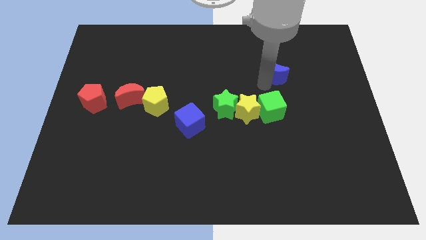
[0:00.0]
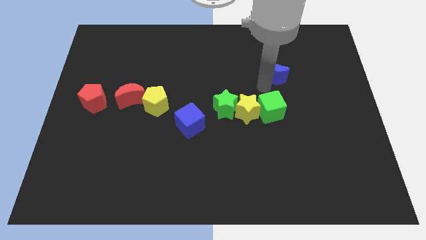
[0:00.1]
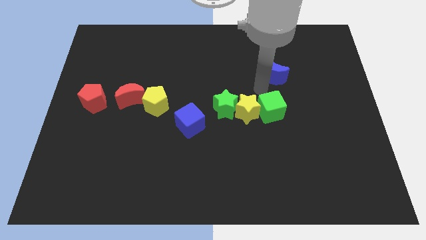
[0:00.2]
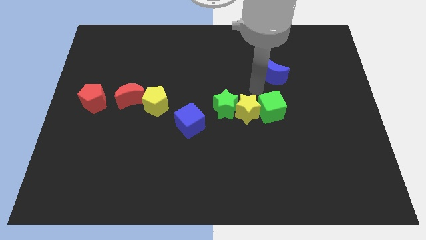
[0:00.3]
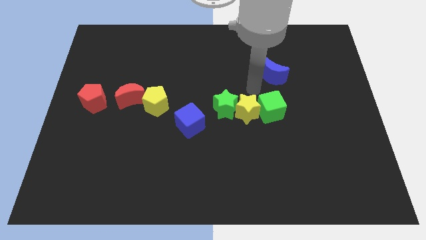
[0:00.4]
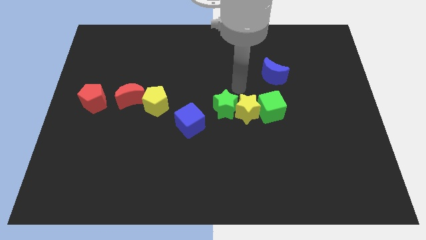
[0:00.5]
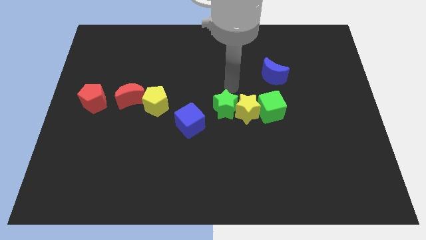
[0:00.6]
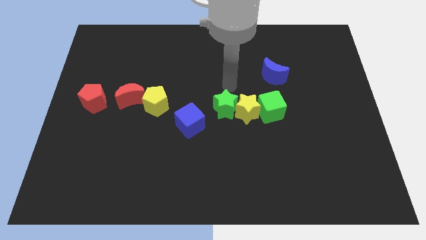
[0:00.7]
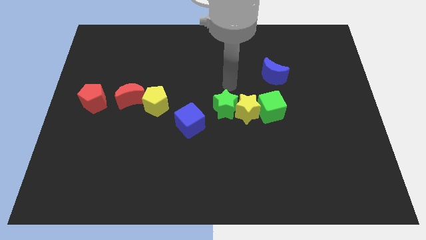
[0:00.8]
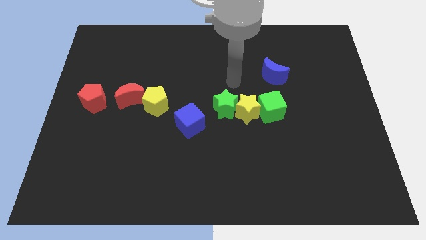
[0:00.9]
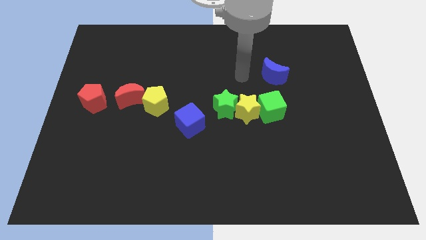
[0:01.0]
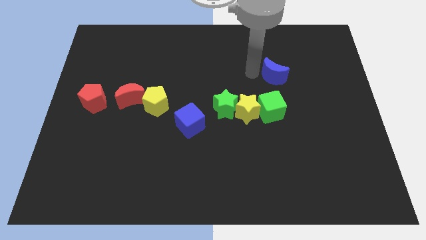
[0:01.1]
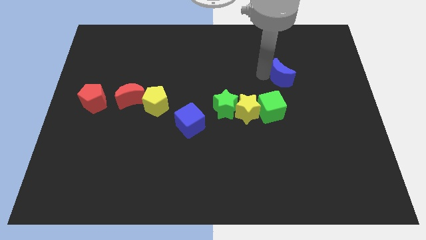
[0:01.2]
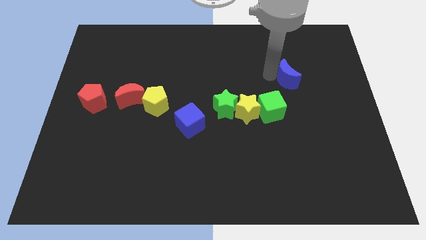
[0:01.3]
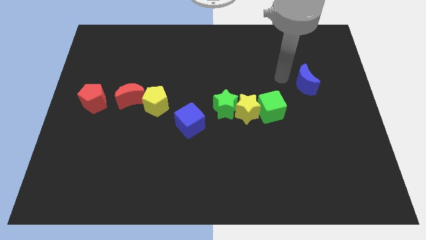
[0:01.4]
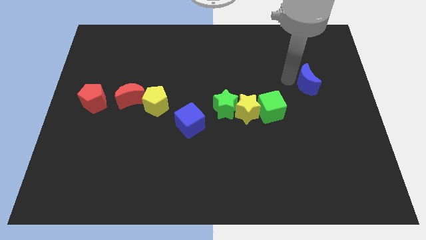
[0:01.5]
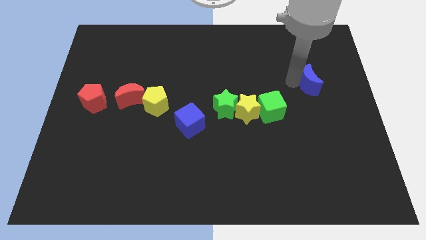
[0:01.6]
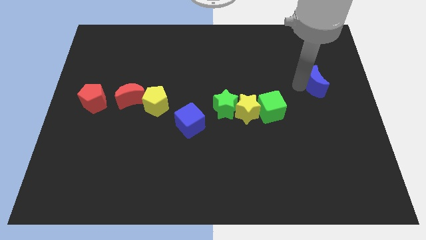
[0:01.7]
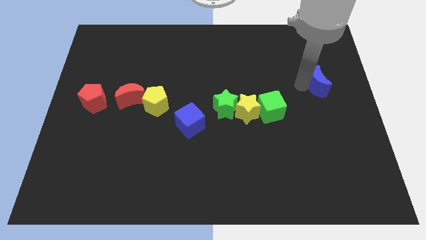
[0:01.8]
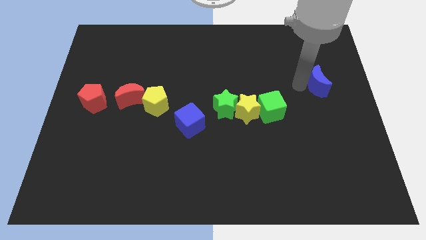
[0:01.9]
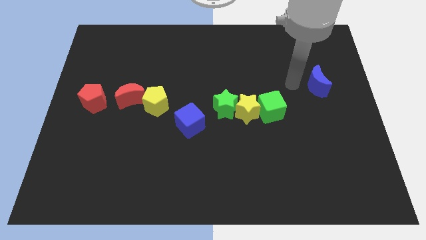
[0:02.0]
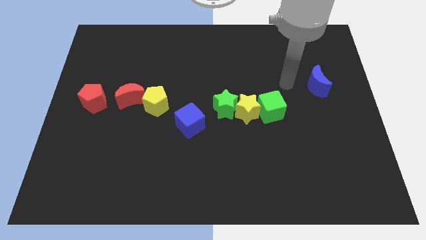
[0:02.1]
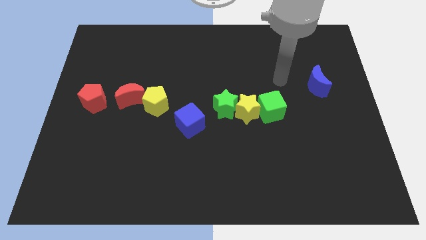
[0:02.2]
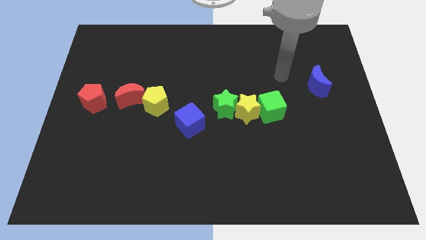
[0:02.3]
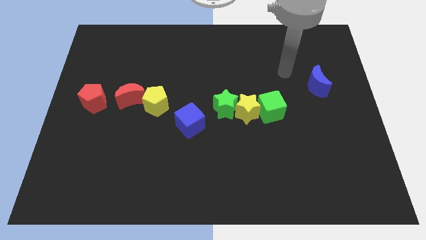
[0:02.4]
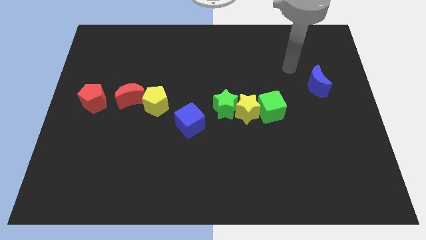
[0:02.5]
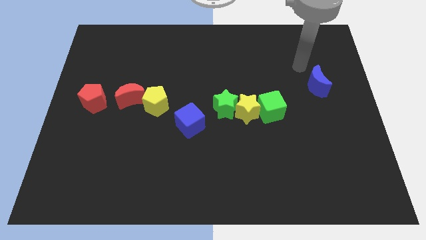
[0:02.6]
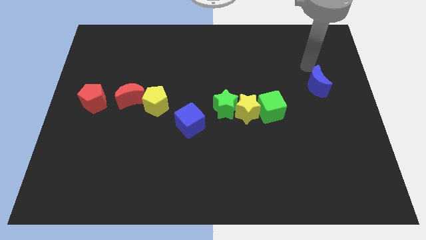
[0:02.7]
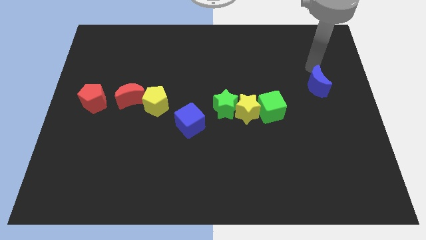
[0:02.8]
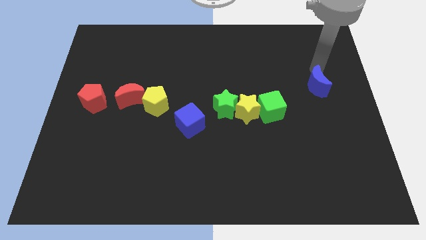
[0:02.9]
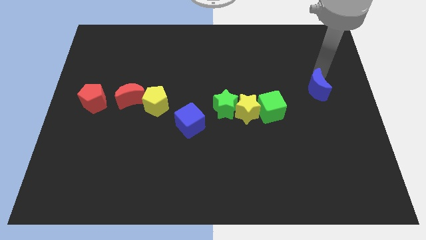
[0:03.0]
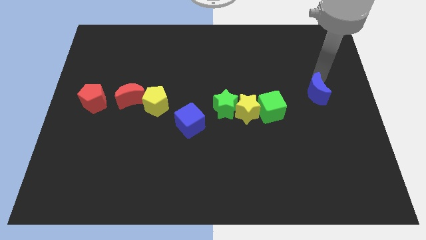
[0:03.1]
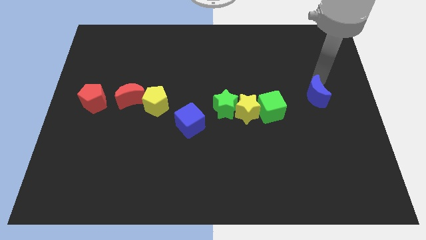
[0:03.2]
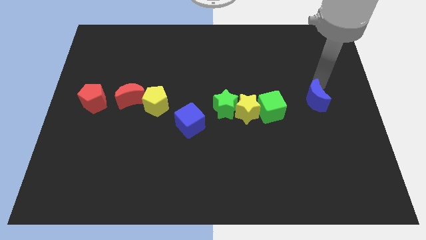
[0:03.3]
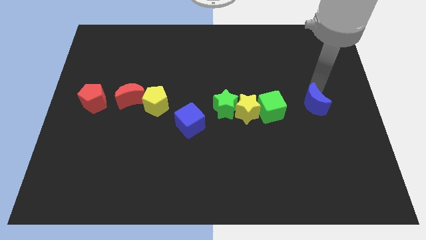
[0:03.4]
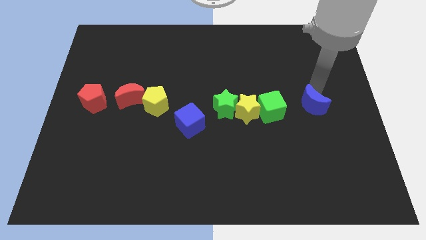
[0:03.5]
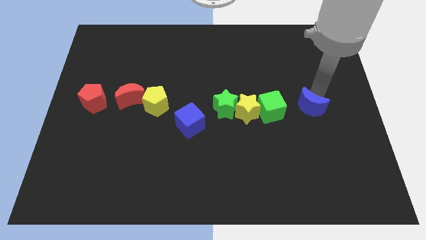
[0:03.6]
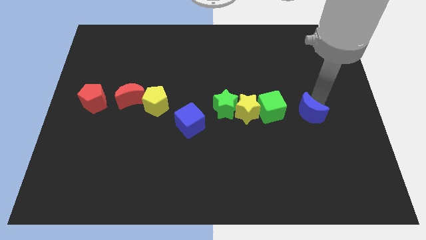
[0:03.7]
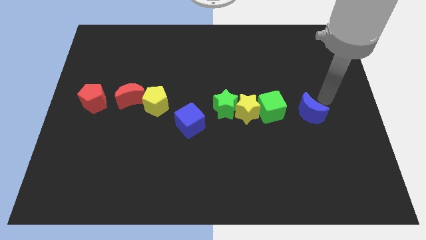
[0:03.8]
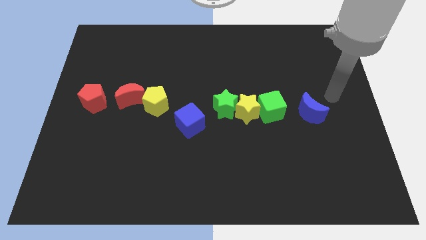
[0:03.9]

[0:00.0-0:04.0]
place the blue crescent to the right side of green cube

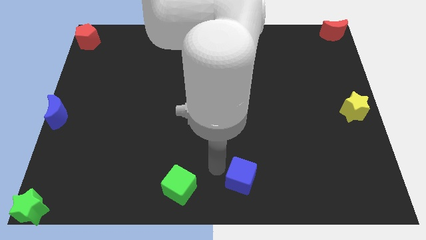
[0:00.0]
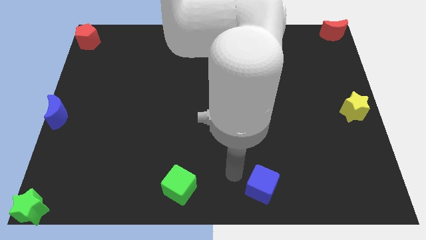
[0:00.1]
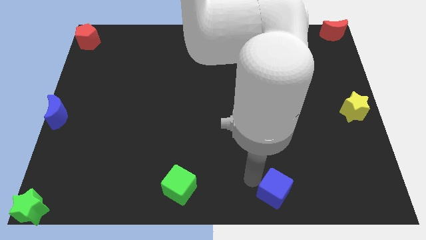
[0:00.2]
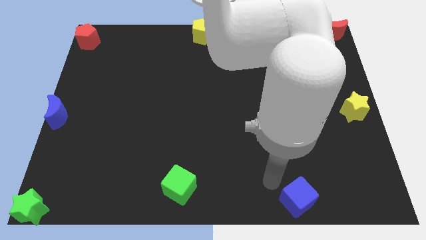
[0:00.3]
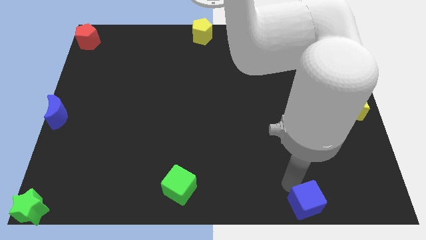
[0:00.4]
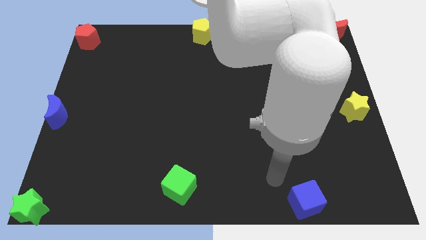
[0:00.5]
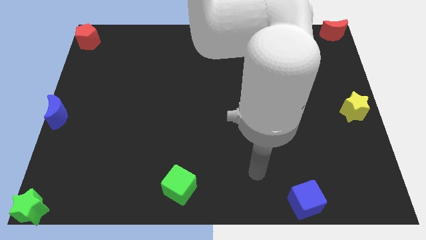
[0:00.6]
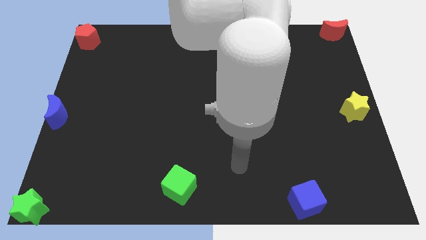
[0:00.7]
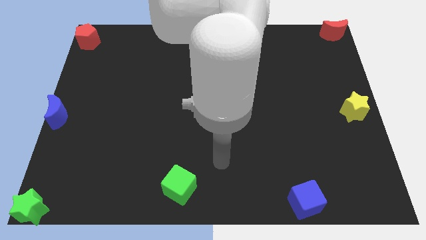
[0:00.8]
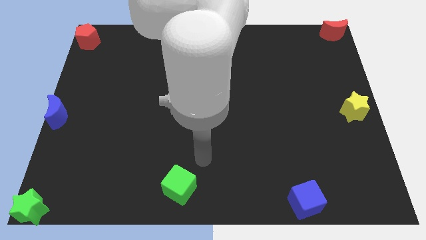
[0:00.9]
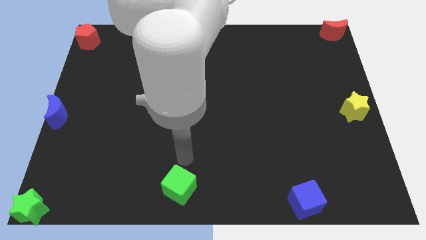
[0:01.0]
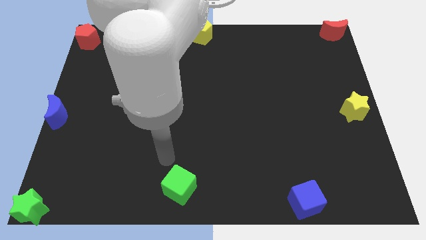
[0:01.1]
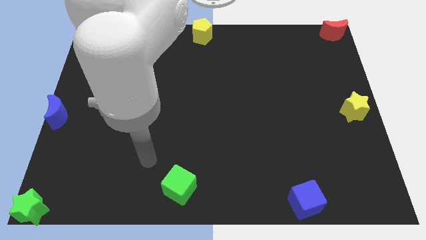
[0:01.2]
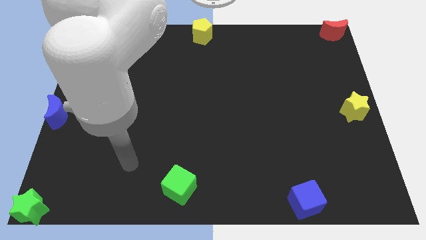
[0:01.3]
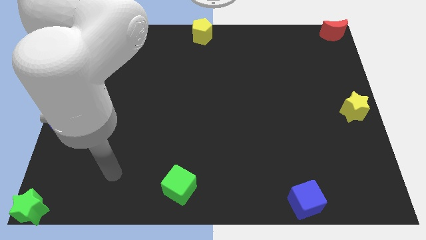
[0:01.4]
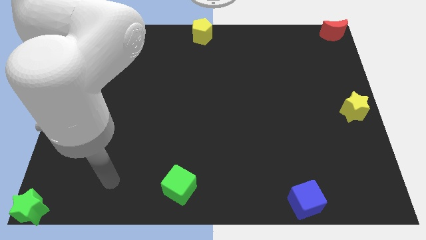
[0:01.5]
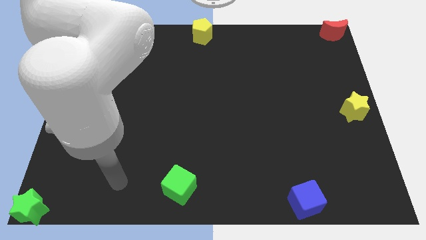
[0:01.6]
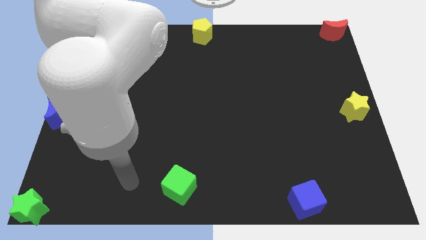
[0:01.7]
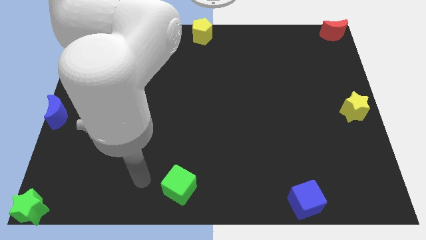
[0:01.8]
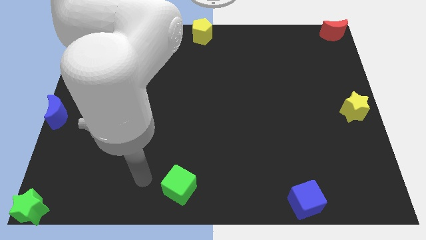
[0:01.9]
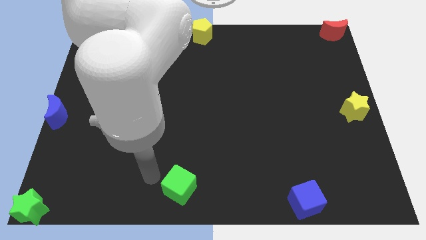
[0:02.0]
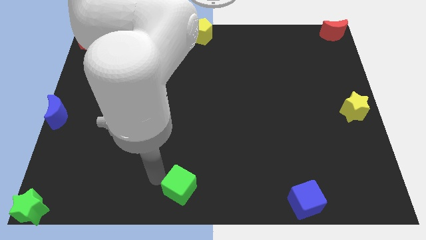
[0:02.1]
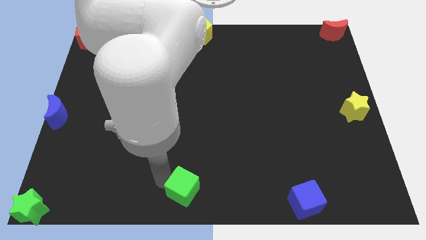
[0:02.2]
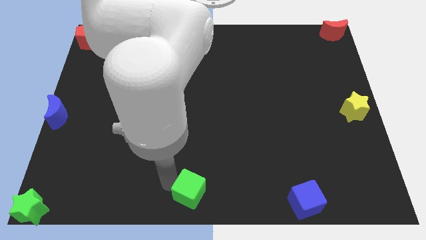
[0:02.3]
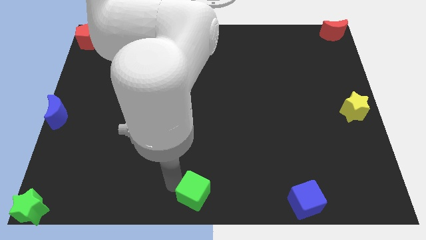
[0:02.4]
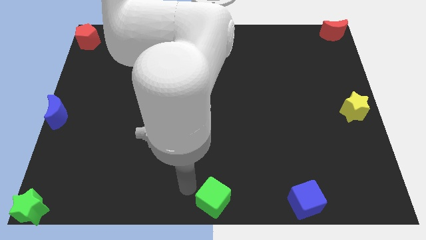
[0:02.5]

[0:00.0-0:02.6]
move the blue cube to the bottom right of the board

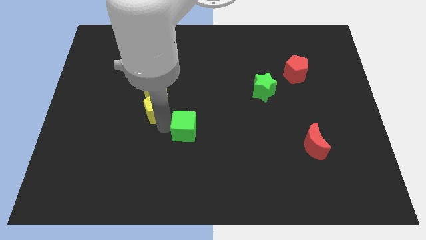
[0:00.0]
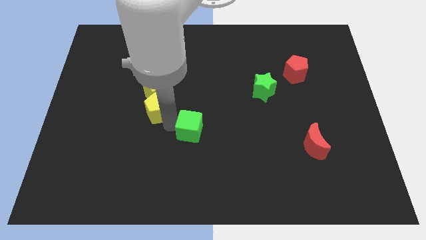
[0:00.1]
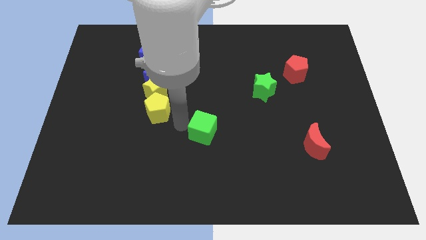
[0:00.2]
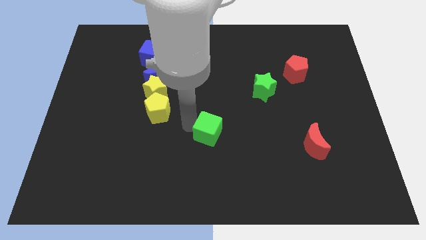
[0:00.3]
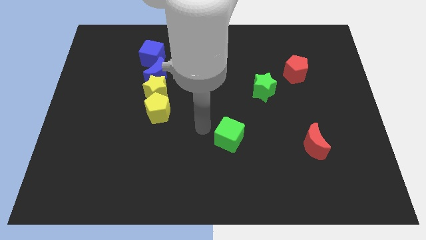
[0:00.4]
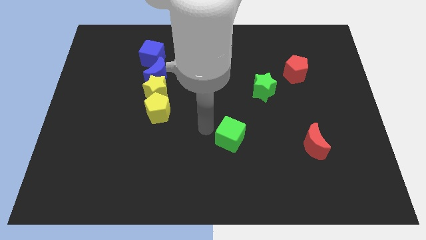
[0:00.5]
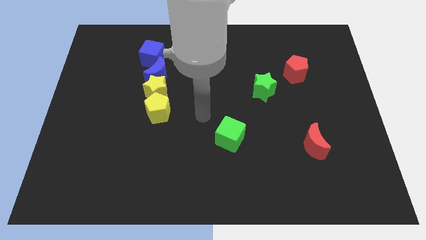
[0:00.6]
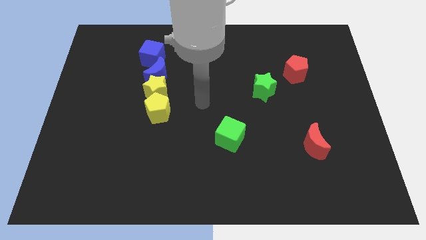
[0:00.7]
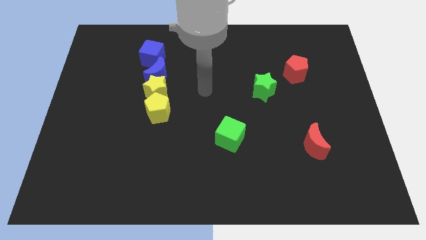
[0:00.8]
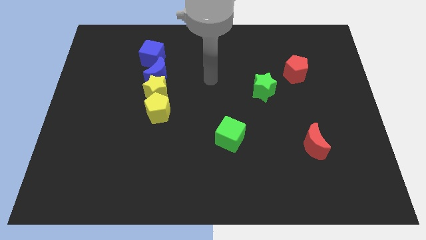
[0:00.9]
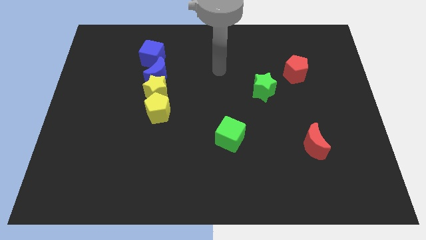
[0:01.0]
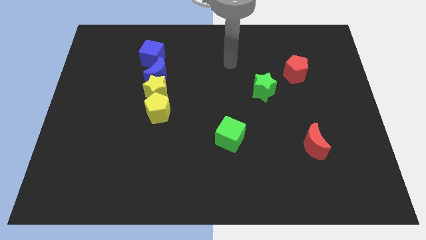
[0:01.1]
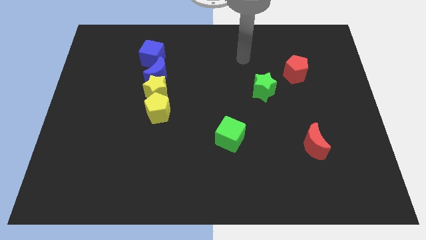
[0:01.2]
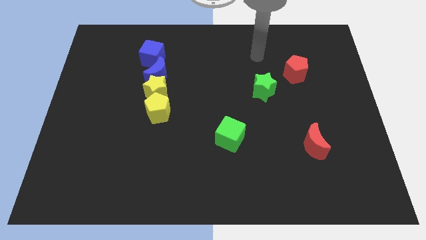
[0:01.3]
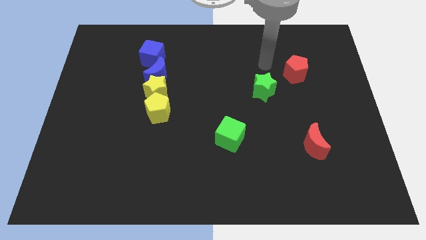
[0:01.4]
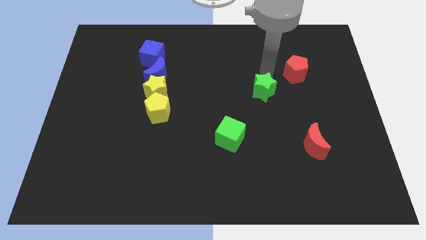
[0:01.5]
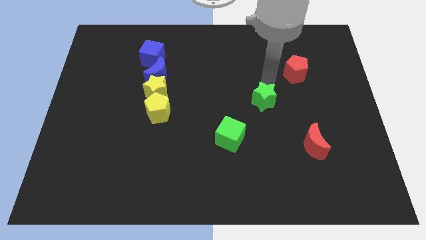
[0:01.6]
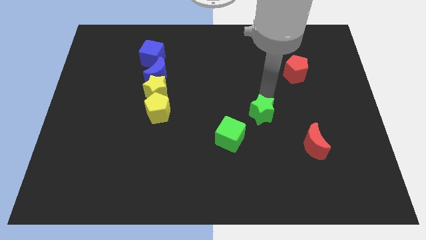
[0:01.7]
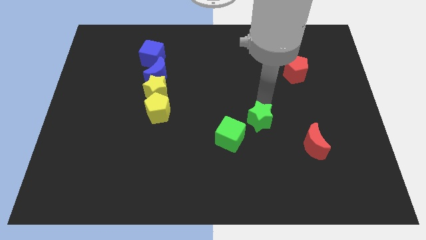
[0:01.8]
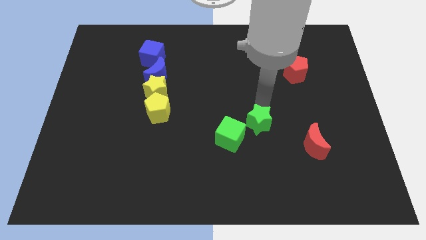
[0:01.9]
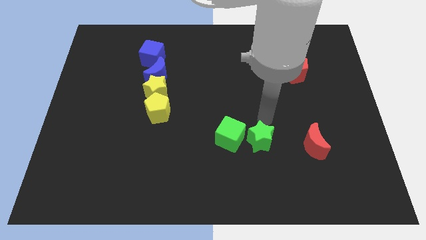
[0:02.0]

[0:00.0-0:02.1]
place green star to the right of green cube

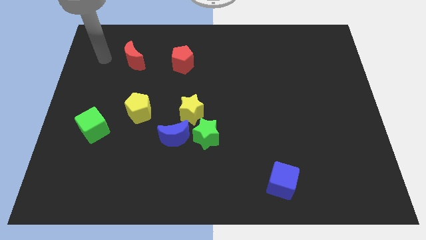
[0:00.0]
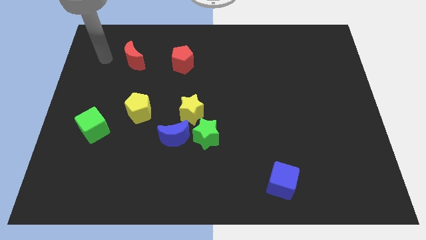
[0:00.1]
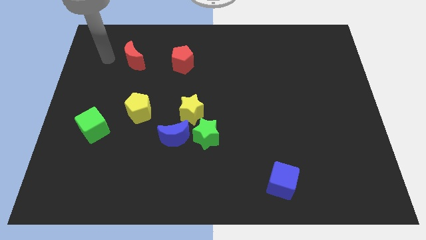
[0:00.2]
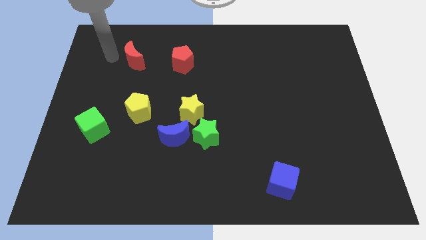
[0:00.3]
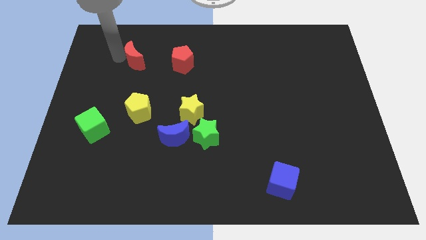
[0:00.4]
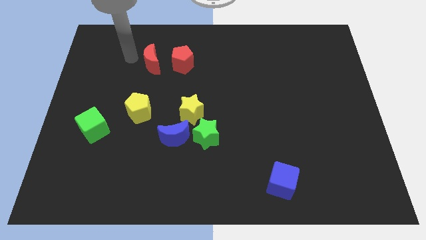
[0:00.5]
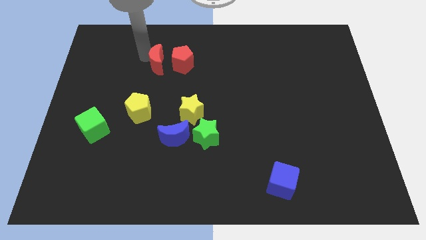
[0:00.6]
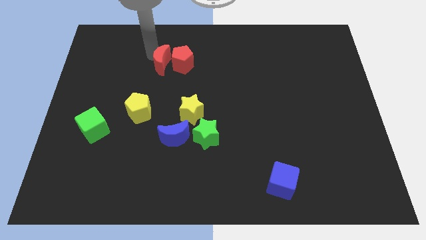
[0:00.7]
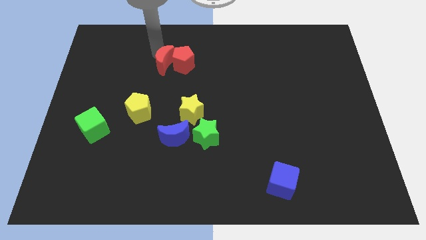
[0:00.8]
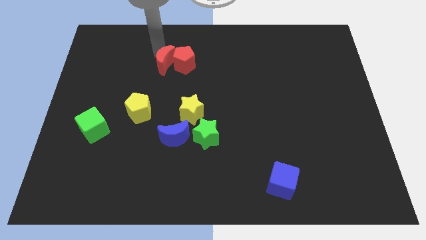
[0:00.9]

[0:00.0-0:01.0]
push red moon into the red pentagon
